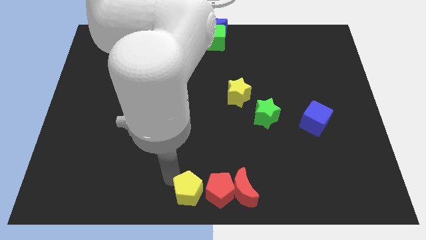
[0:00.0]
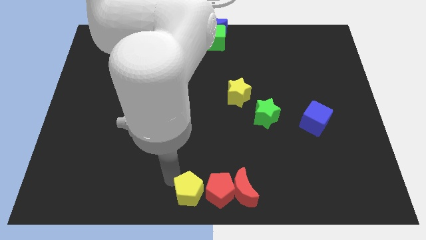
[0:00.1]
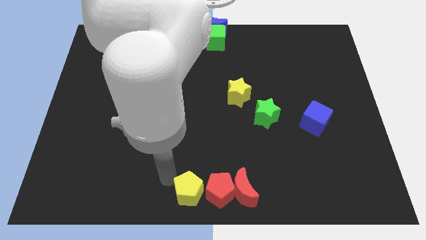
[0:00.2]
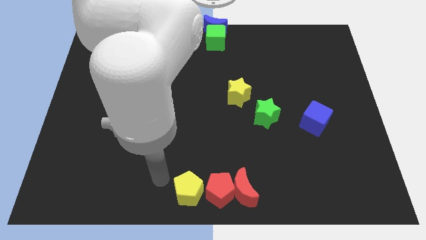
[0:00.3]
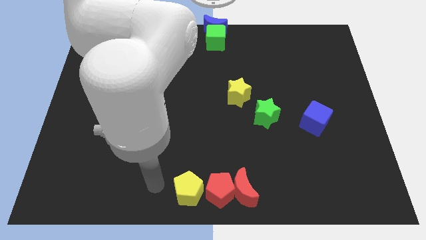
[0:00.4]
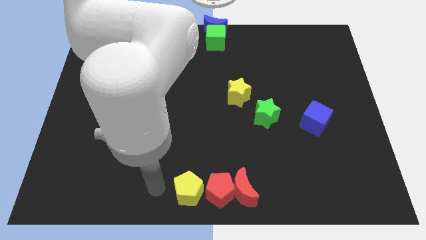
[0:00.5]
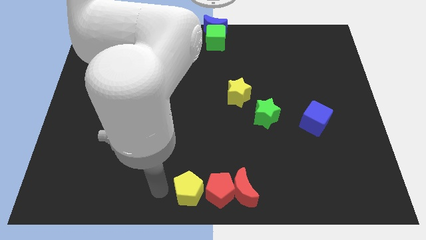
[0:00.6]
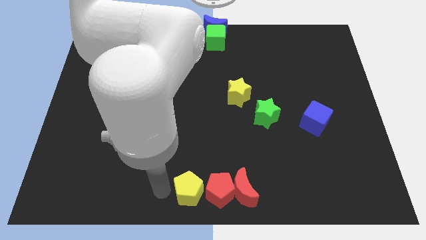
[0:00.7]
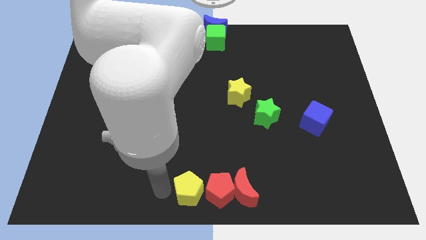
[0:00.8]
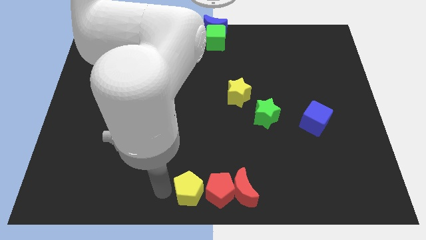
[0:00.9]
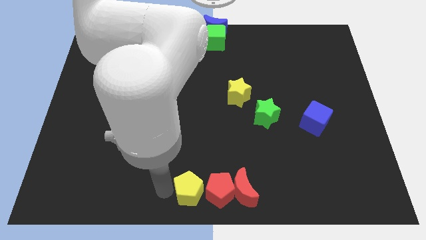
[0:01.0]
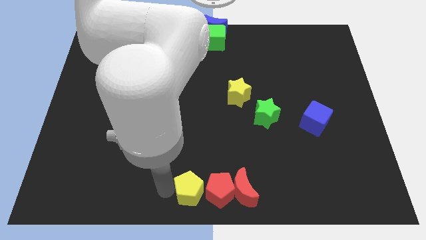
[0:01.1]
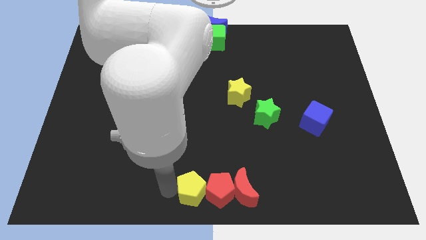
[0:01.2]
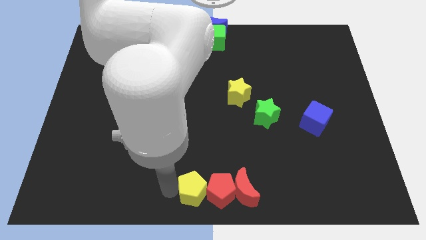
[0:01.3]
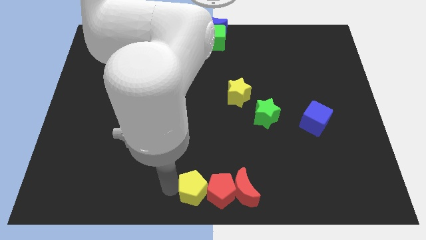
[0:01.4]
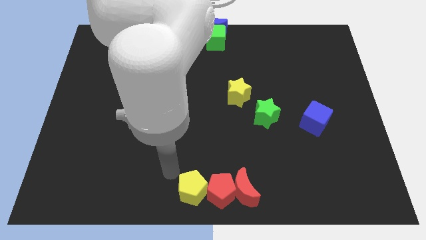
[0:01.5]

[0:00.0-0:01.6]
put the yellow pentagon into the red pentagon

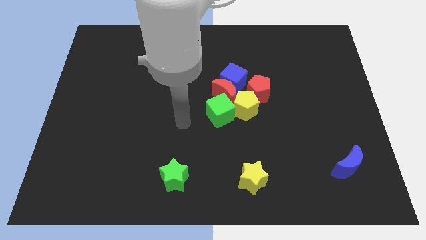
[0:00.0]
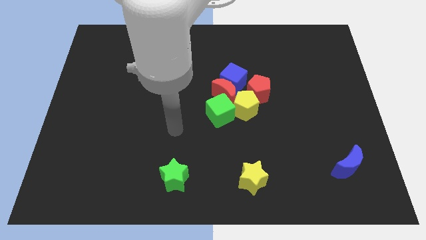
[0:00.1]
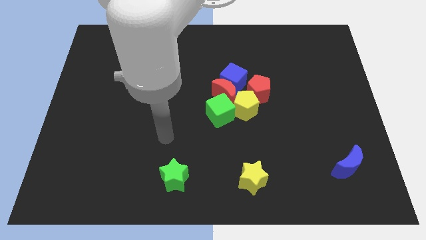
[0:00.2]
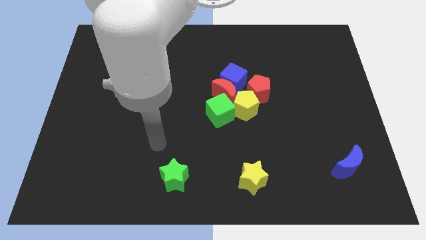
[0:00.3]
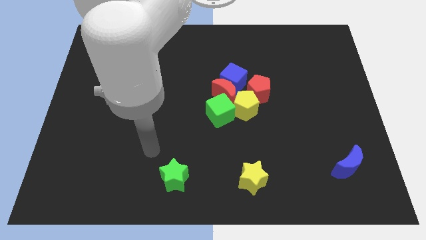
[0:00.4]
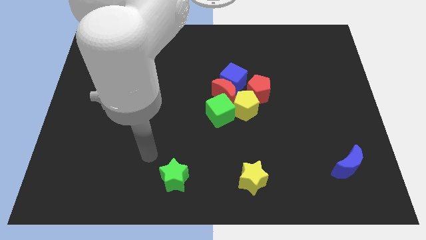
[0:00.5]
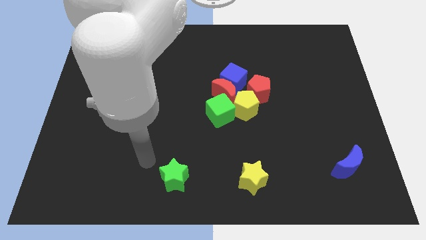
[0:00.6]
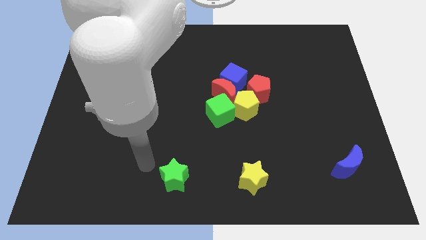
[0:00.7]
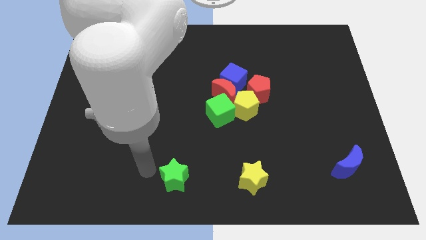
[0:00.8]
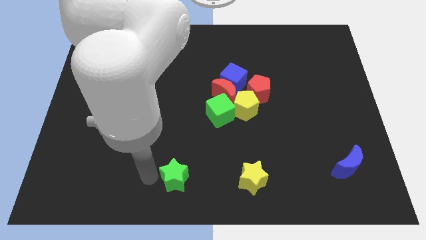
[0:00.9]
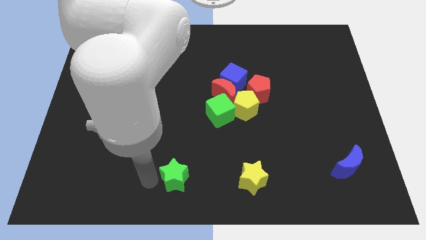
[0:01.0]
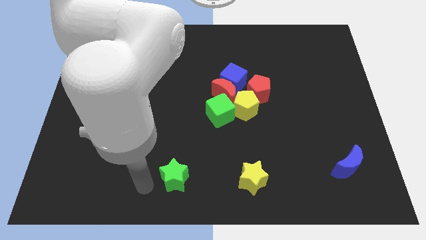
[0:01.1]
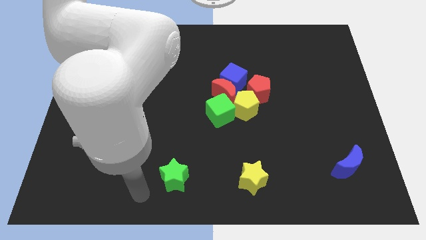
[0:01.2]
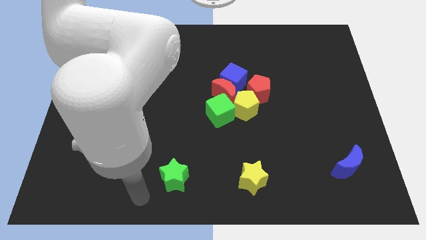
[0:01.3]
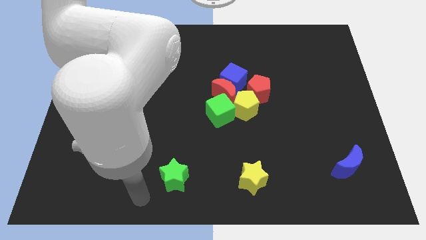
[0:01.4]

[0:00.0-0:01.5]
move your arm towards the green star

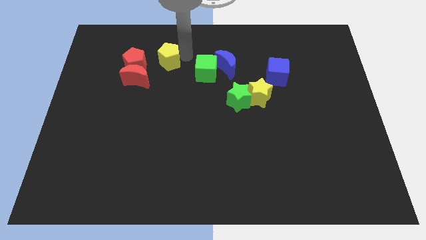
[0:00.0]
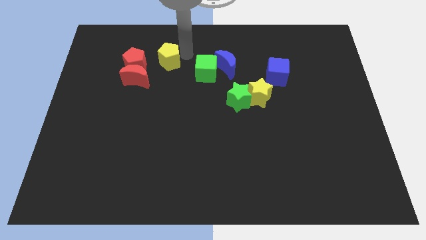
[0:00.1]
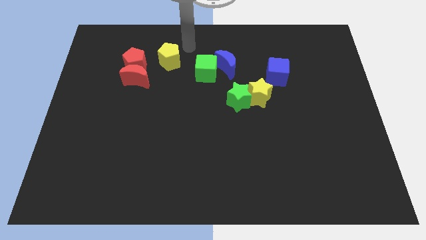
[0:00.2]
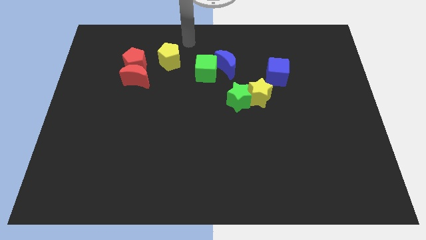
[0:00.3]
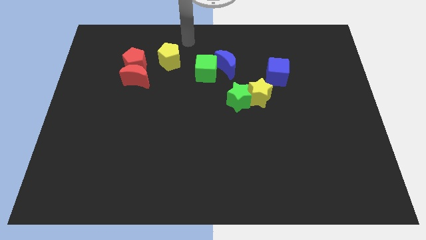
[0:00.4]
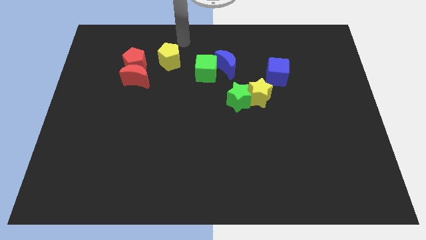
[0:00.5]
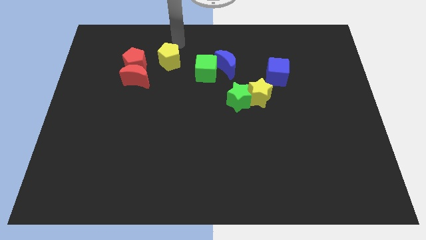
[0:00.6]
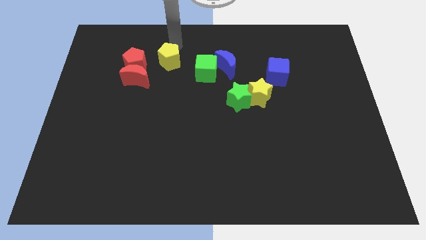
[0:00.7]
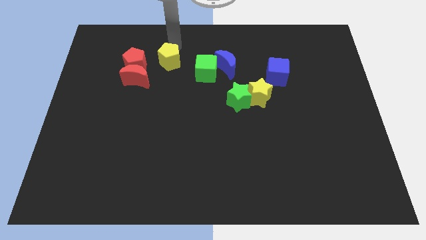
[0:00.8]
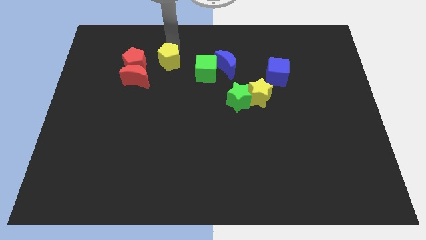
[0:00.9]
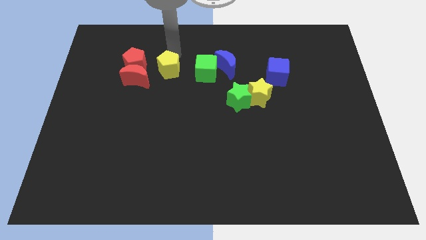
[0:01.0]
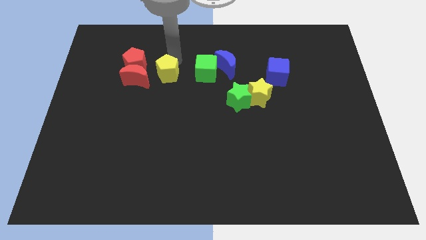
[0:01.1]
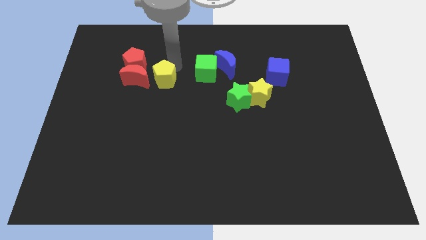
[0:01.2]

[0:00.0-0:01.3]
put the yellow pentagon right to the red moon

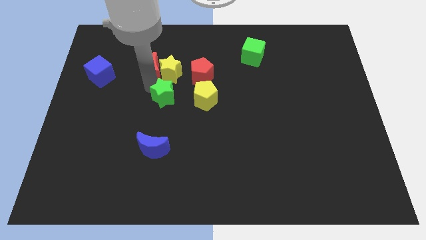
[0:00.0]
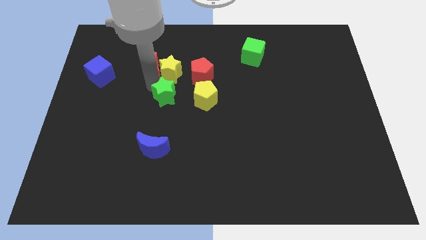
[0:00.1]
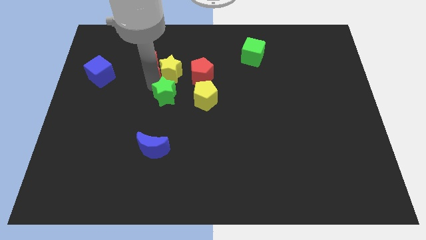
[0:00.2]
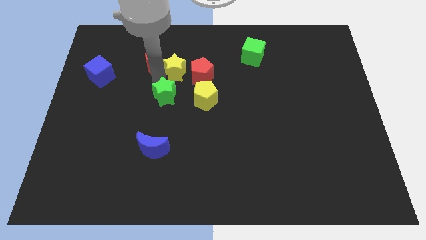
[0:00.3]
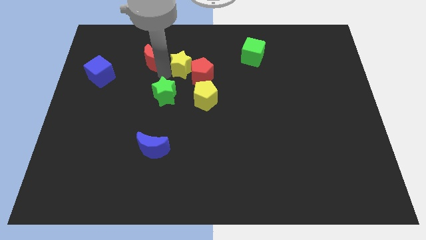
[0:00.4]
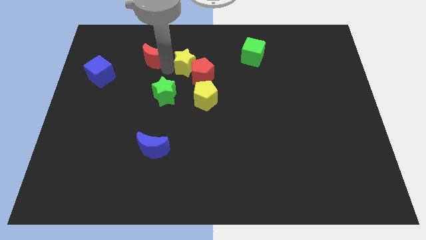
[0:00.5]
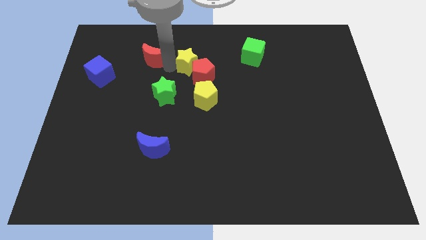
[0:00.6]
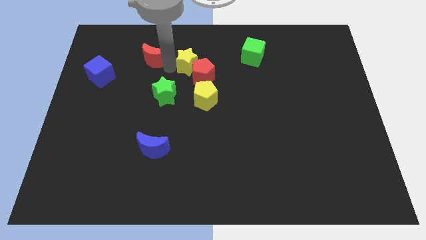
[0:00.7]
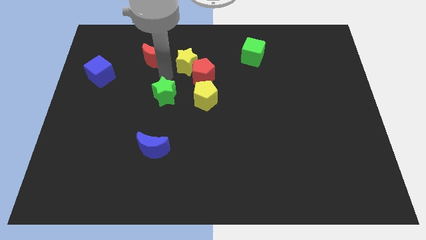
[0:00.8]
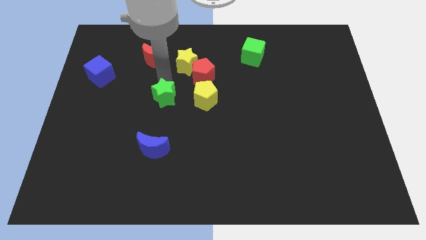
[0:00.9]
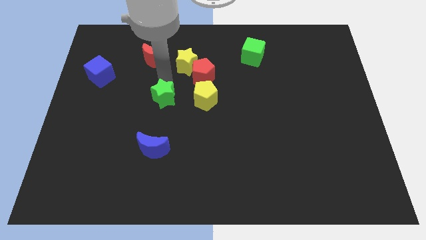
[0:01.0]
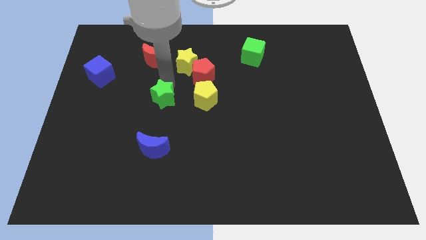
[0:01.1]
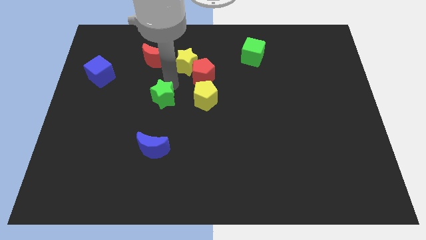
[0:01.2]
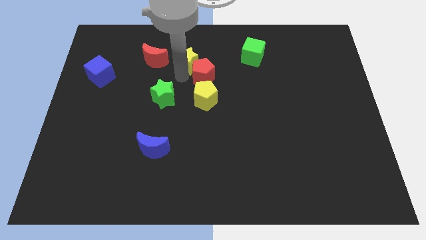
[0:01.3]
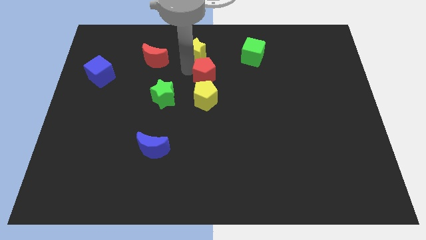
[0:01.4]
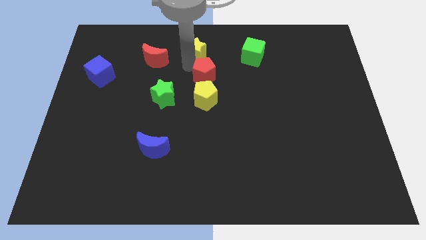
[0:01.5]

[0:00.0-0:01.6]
separate the yellow and green stars from red moon

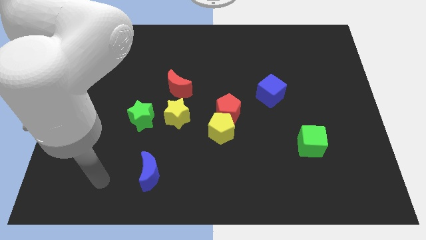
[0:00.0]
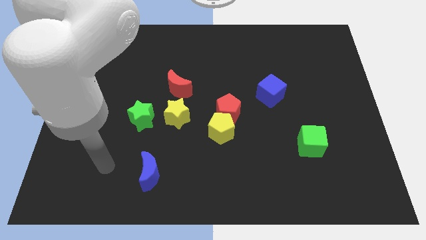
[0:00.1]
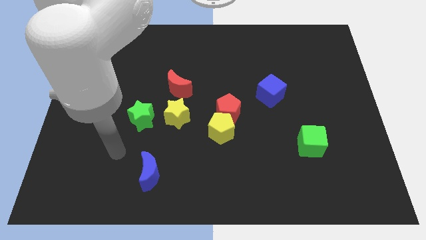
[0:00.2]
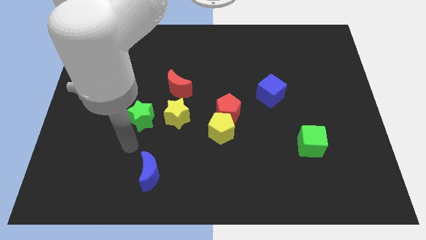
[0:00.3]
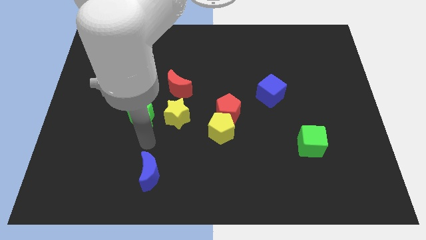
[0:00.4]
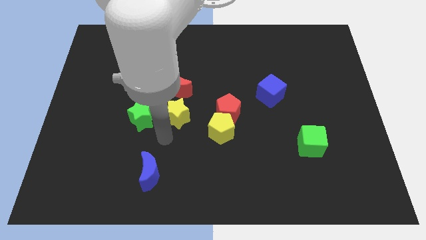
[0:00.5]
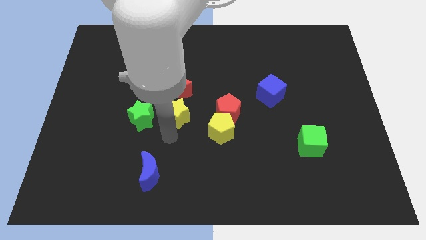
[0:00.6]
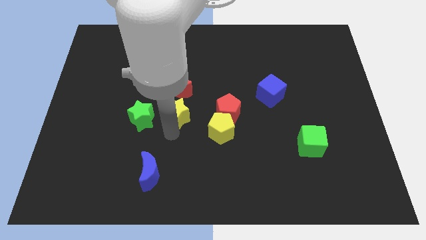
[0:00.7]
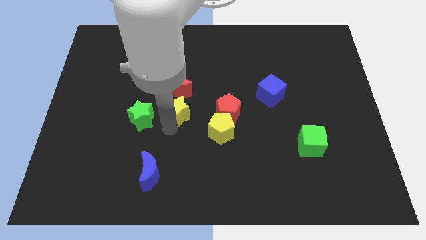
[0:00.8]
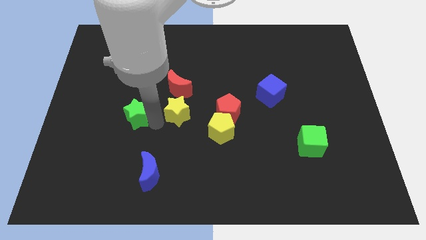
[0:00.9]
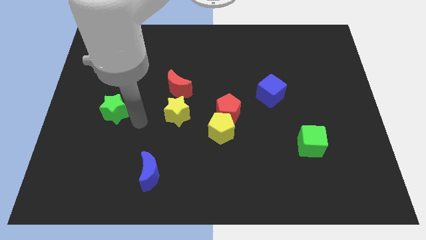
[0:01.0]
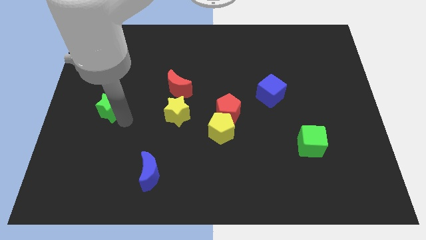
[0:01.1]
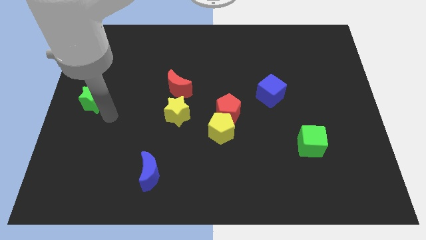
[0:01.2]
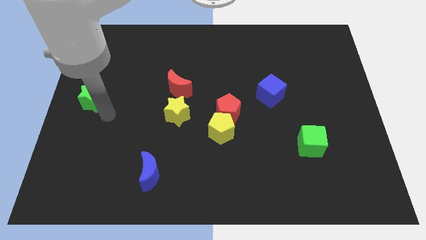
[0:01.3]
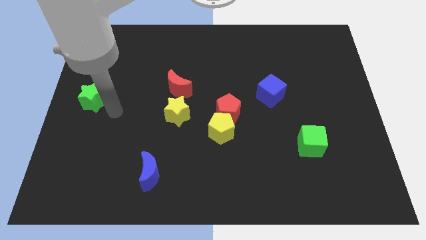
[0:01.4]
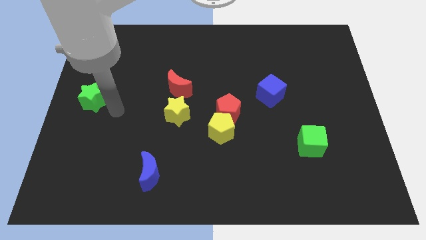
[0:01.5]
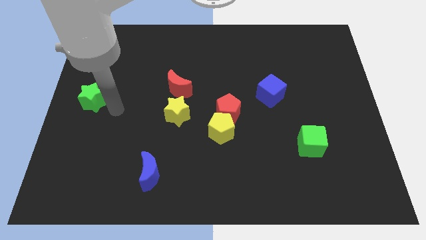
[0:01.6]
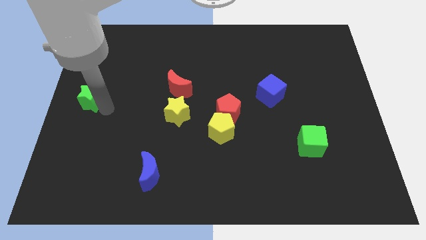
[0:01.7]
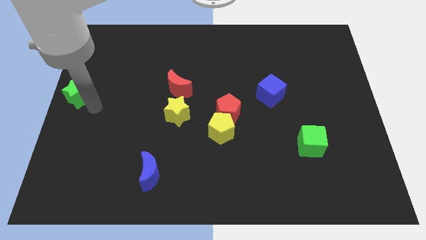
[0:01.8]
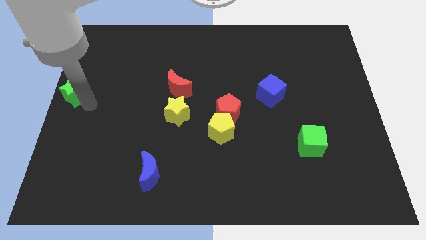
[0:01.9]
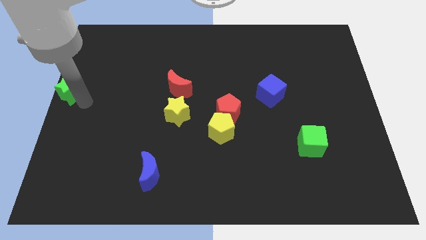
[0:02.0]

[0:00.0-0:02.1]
move the green star towards the left side of the board

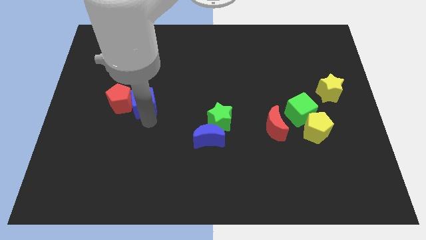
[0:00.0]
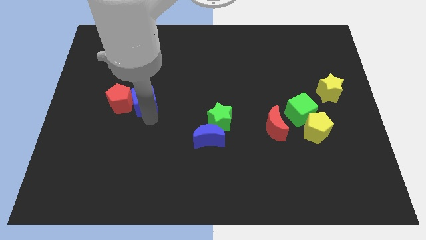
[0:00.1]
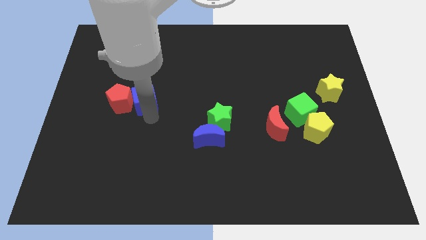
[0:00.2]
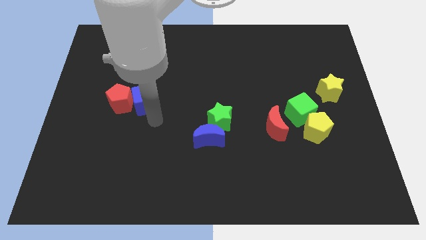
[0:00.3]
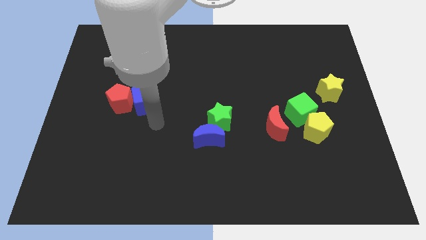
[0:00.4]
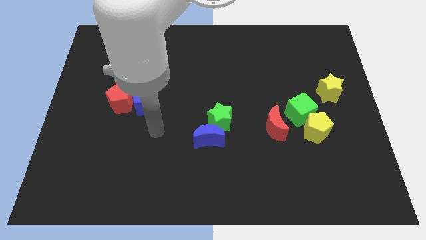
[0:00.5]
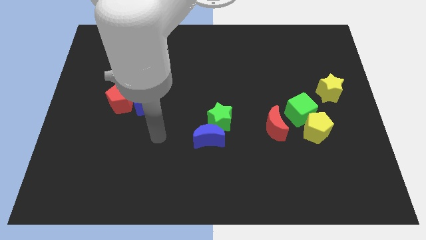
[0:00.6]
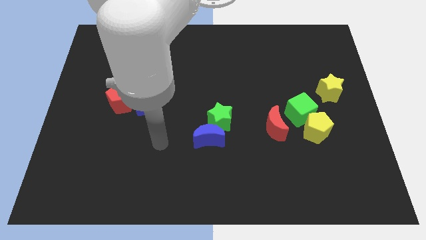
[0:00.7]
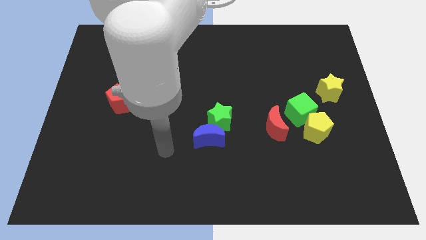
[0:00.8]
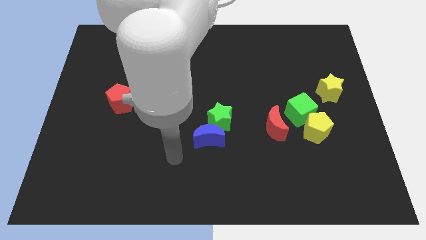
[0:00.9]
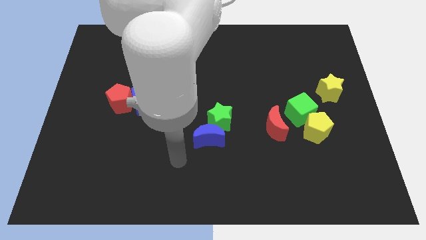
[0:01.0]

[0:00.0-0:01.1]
move your arm away from blue cube
